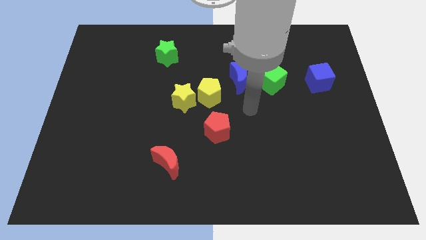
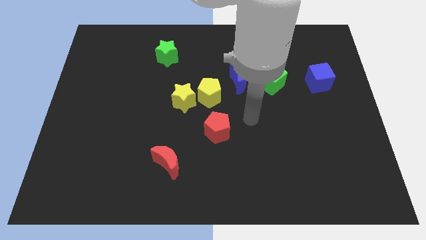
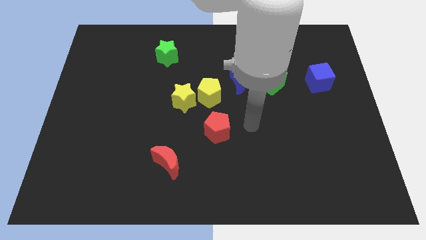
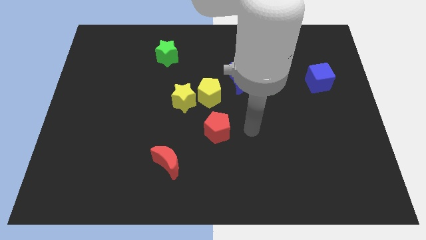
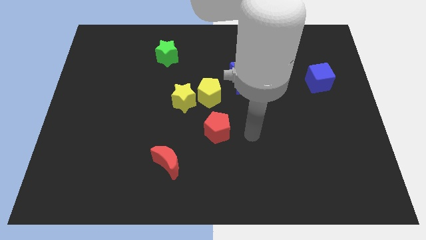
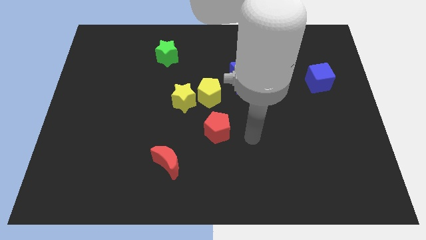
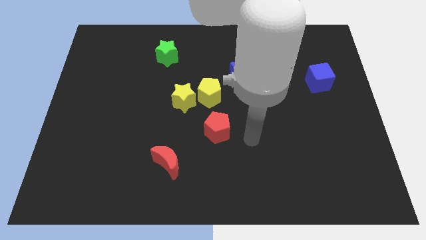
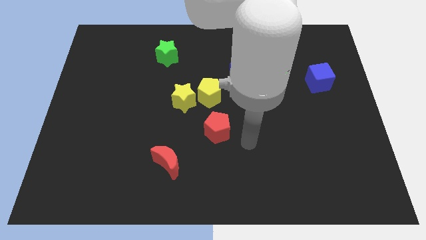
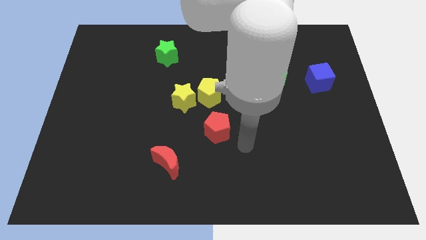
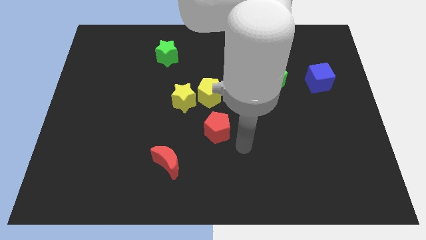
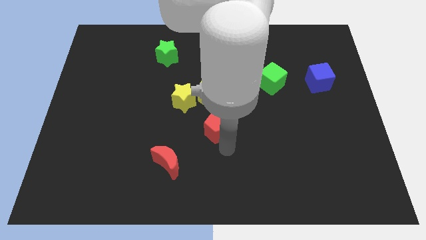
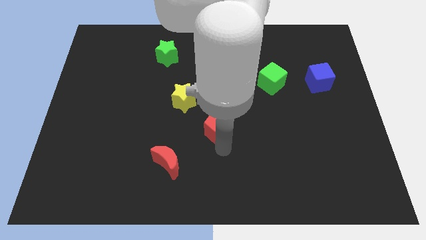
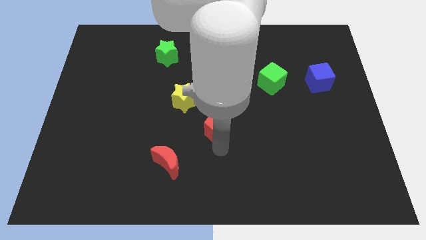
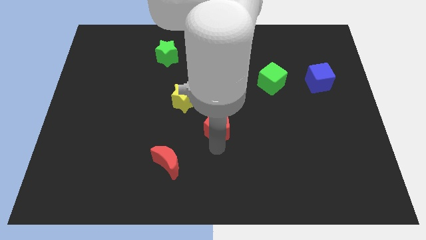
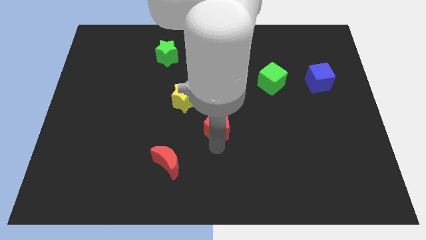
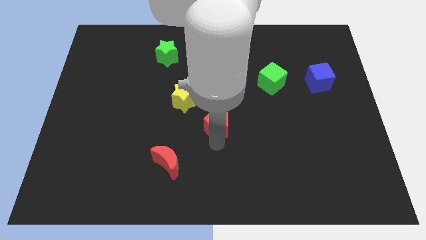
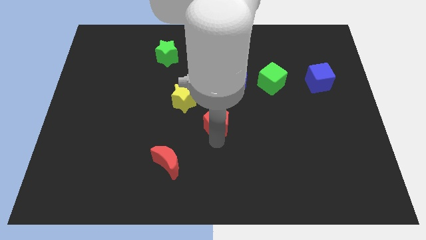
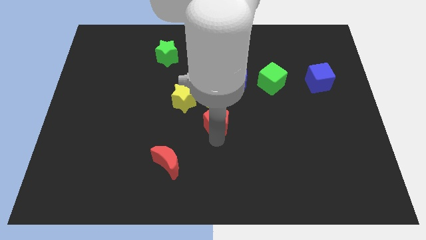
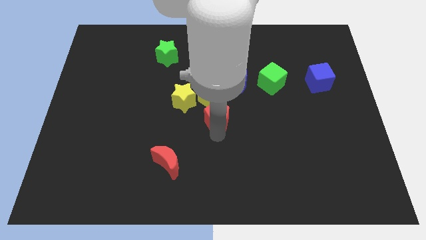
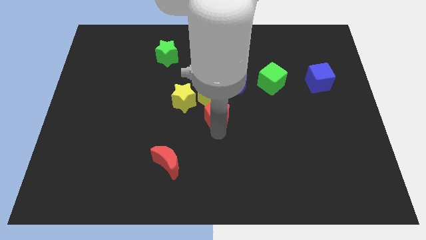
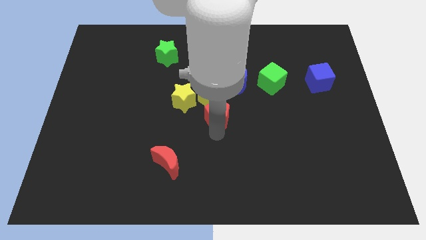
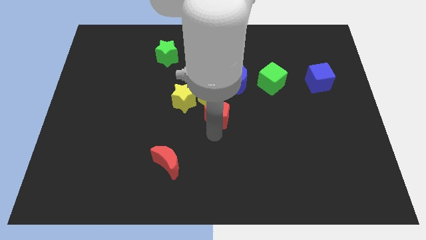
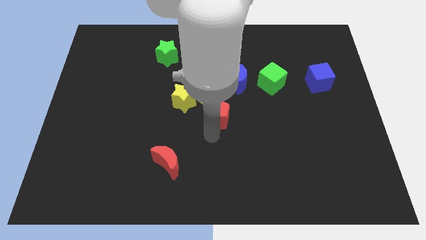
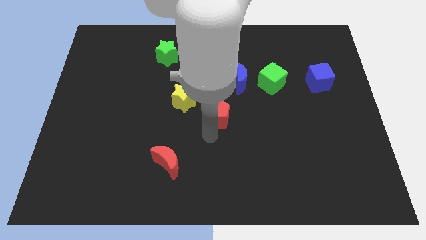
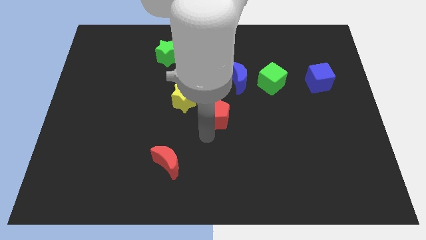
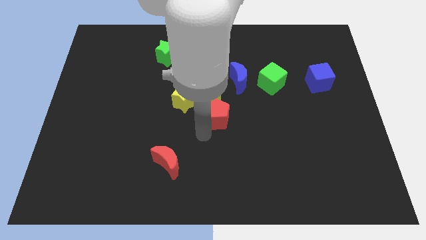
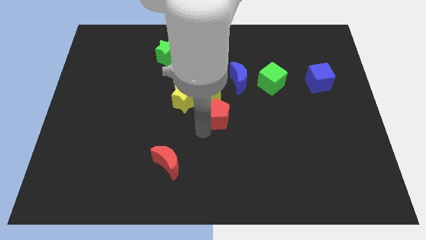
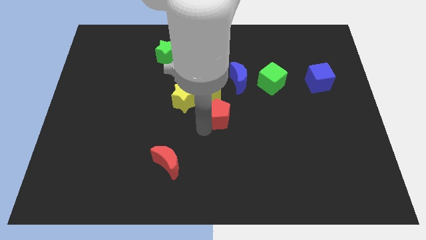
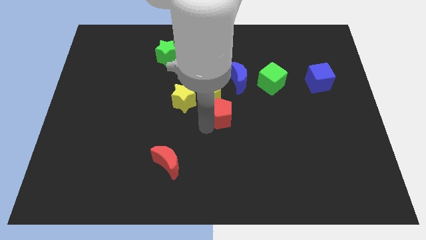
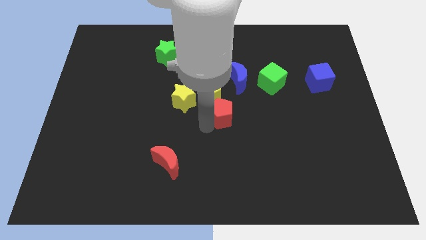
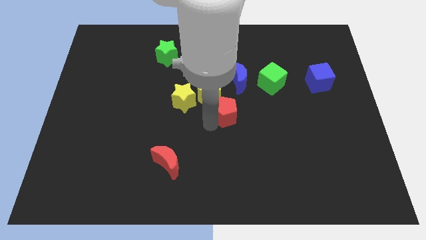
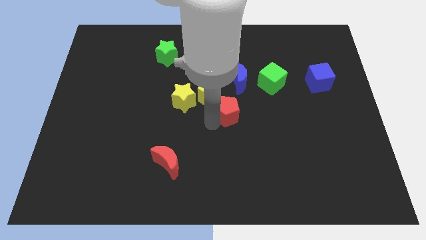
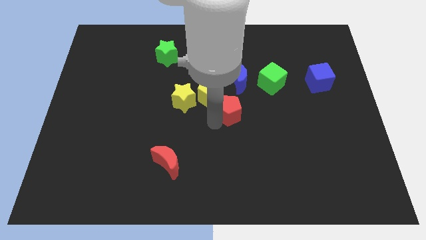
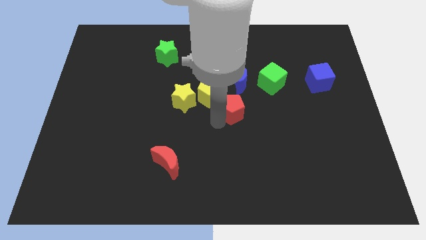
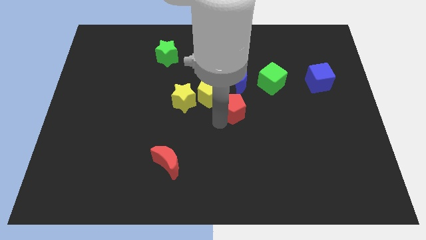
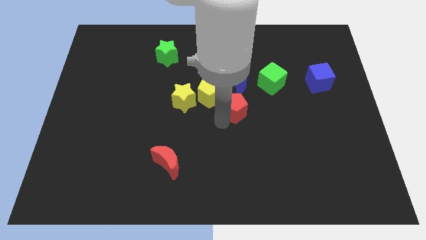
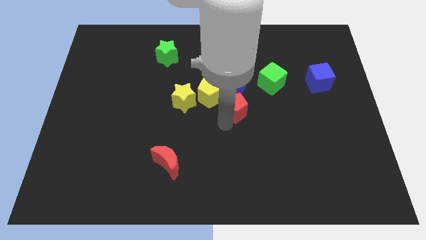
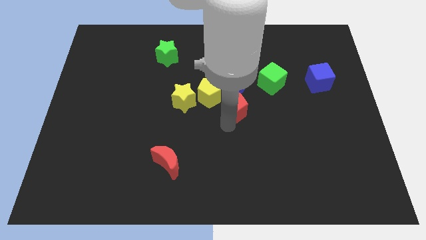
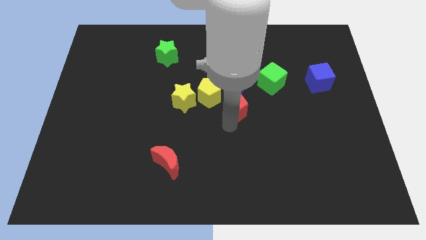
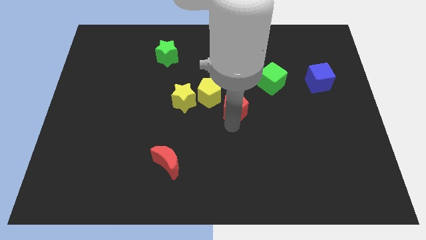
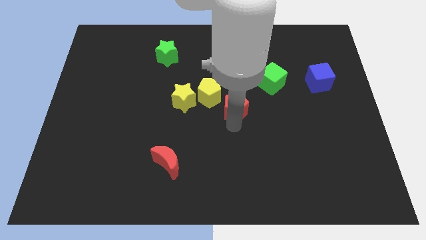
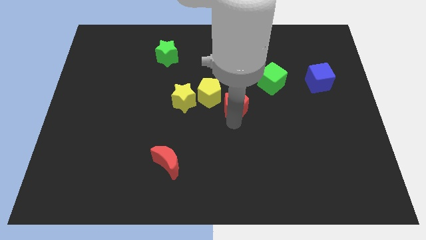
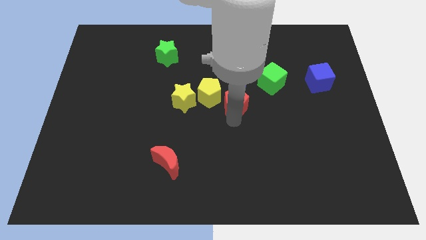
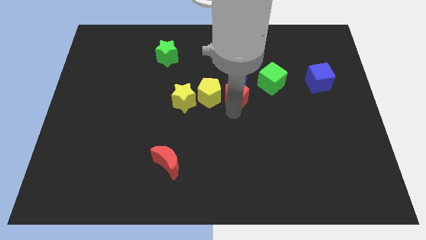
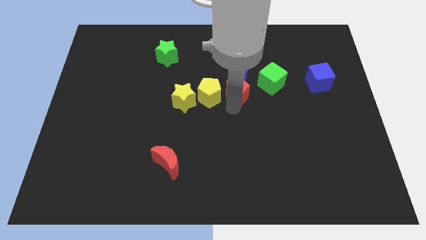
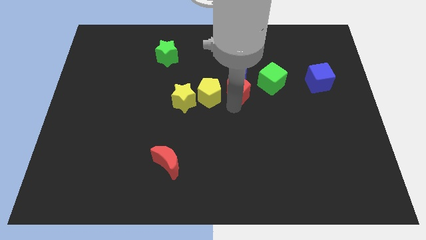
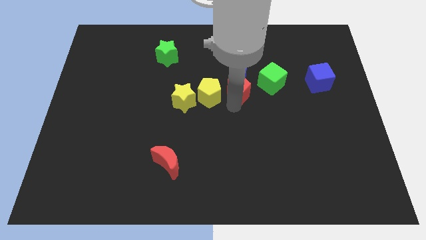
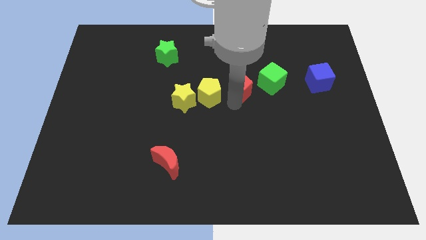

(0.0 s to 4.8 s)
move the red pentagon towards the blue moon

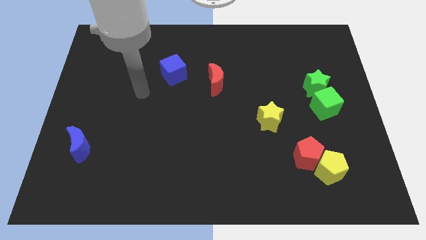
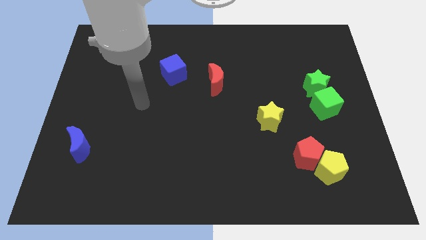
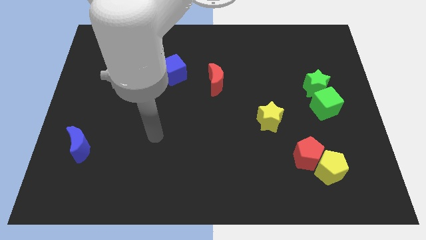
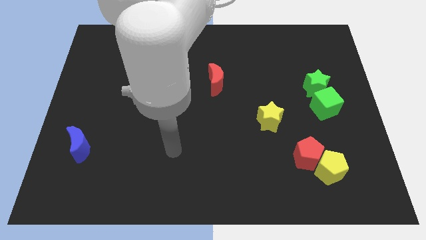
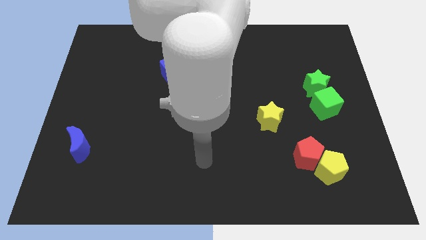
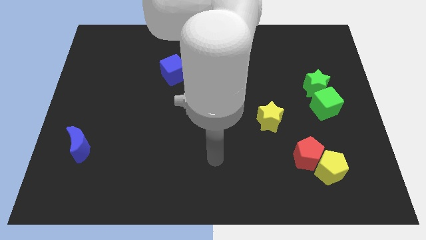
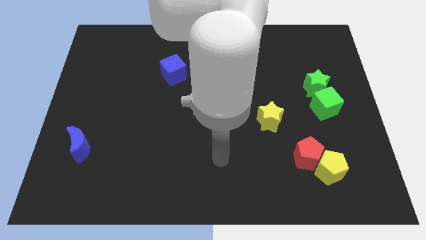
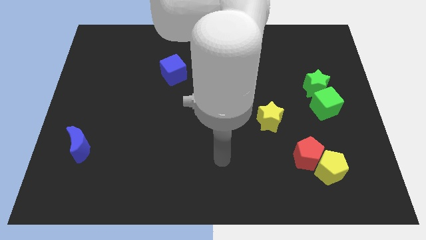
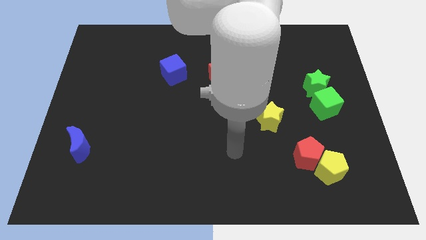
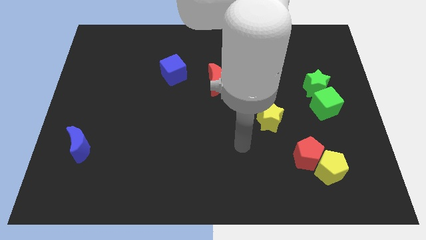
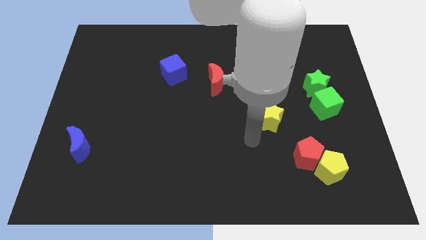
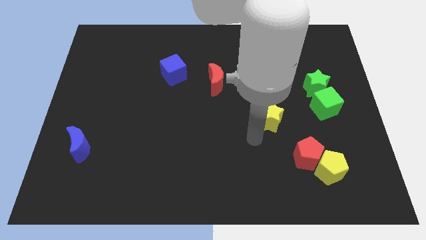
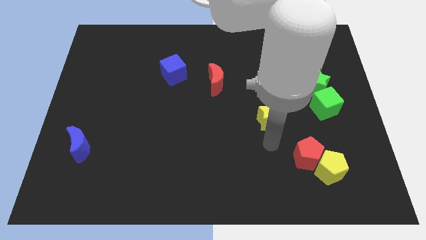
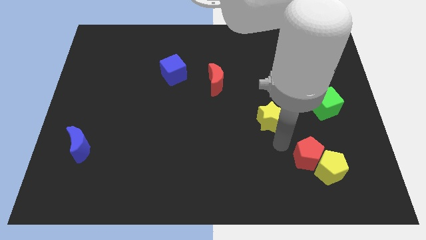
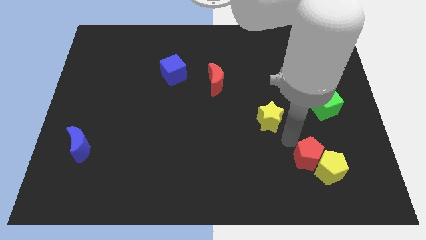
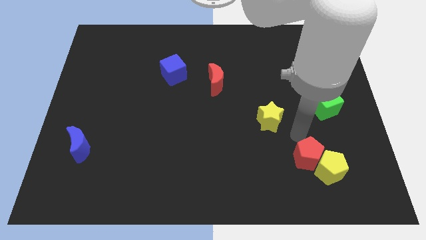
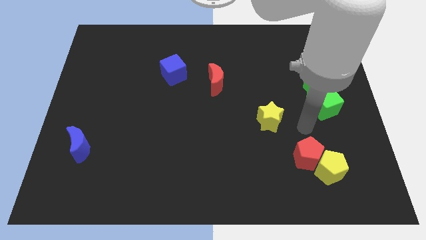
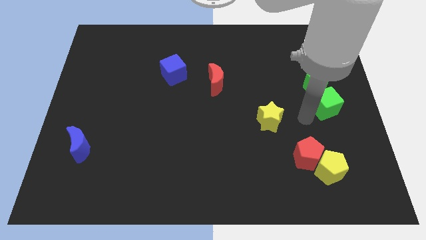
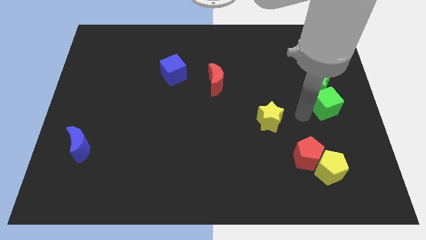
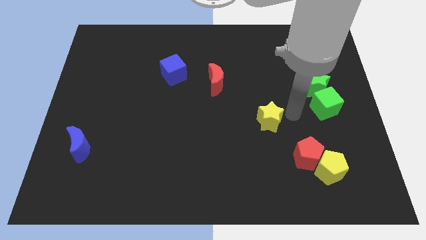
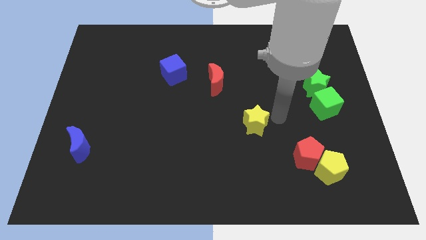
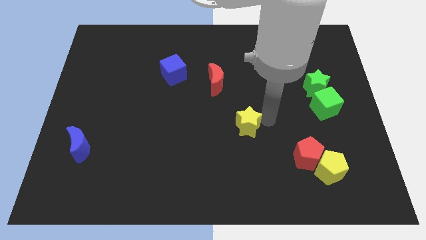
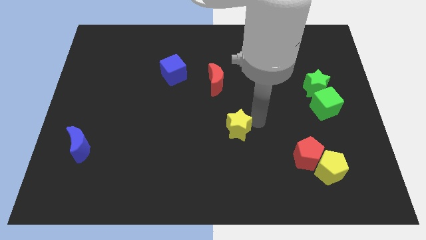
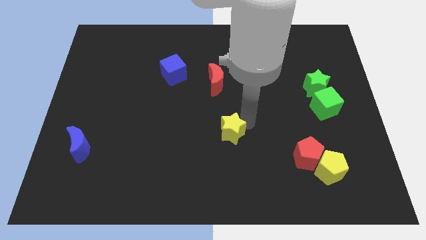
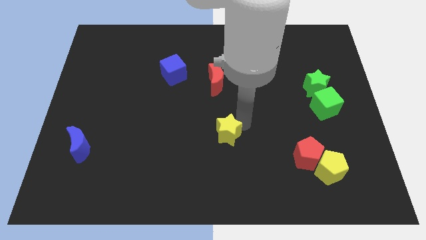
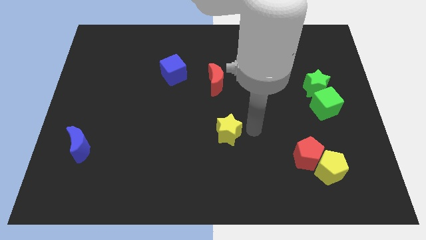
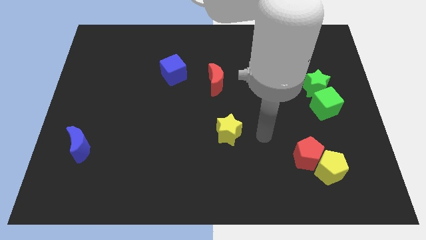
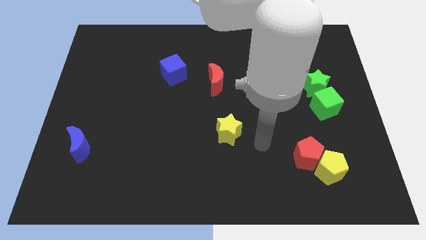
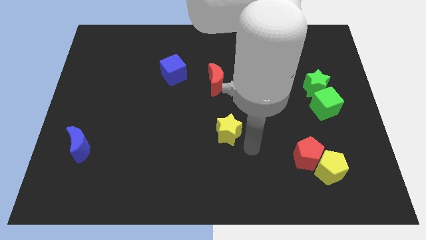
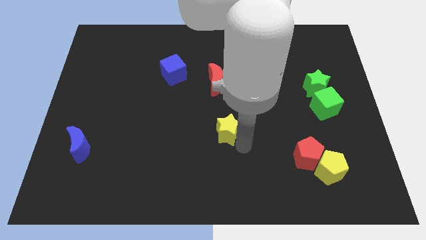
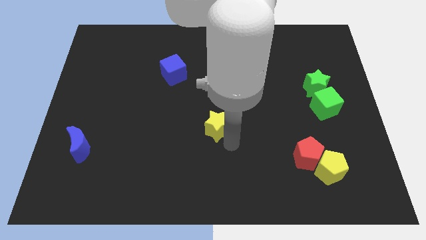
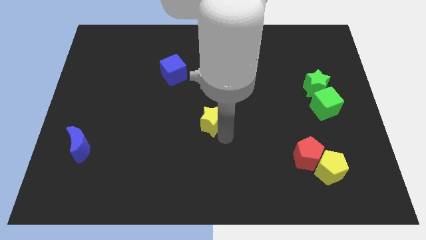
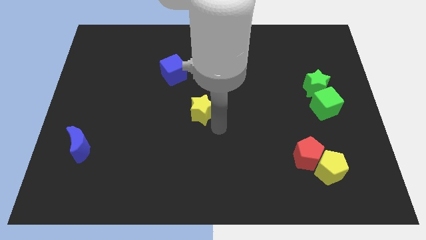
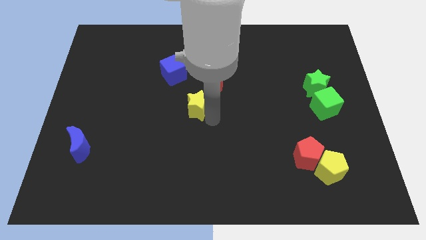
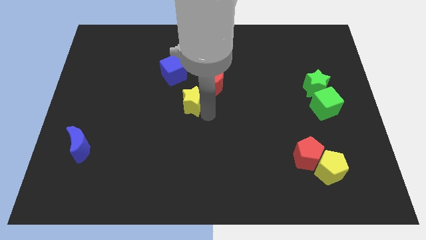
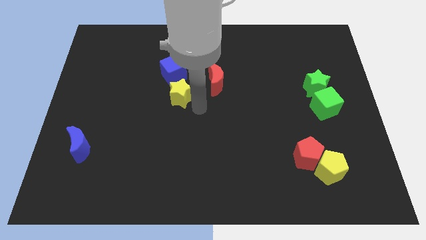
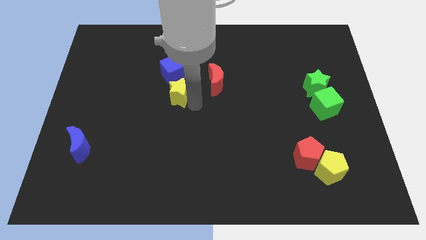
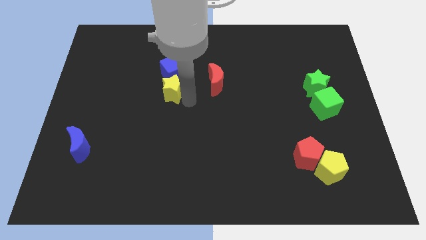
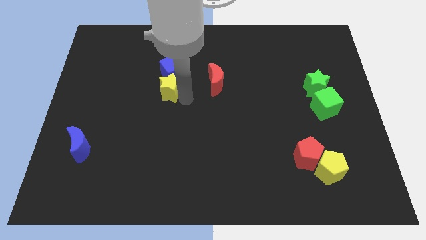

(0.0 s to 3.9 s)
push the yellow star towards the blue cube
